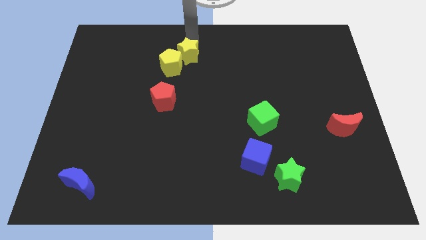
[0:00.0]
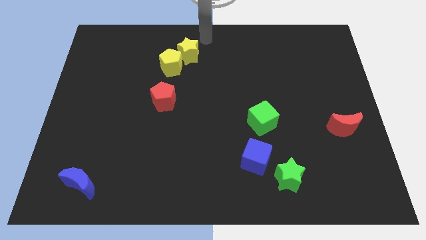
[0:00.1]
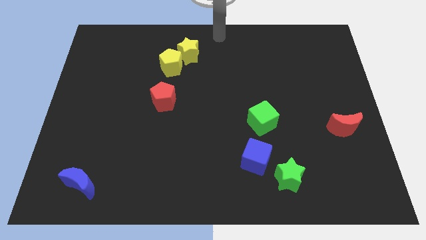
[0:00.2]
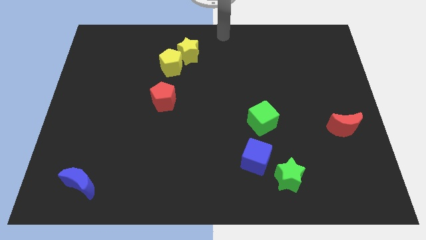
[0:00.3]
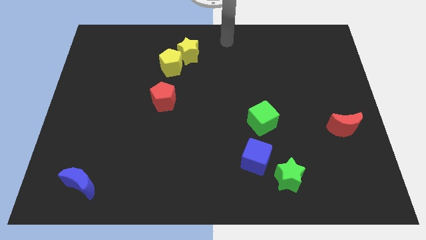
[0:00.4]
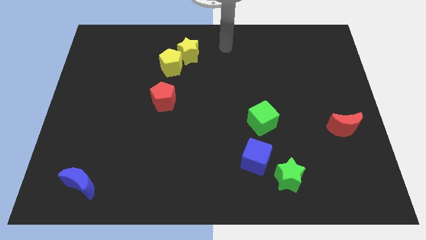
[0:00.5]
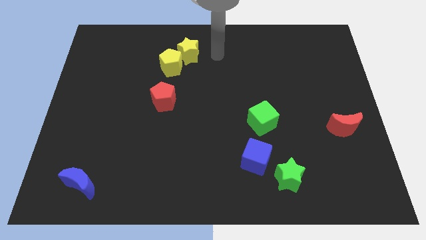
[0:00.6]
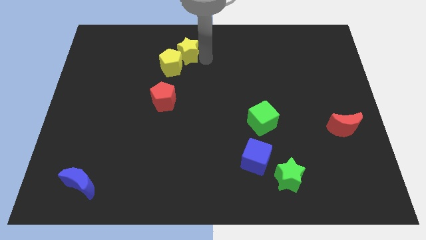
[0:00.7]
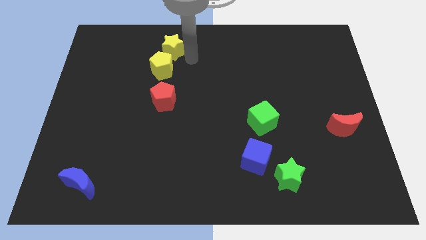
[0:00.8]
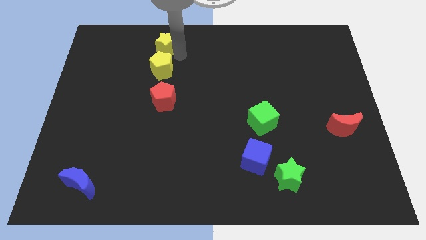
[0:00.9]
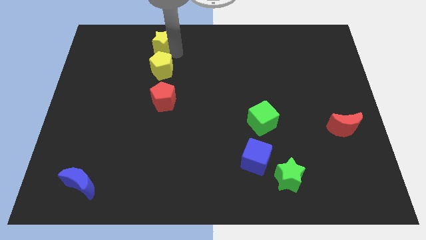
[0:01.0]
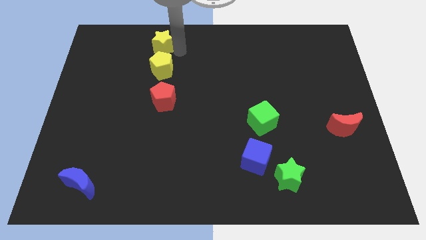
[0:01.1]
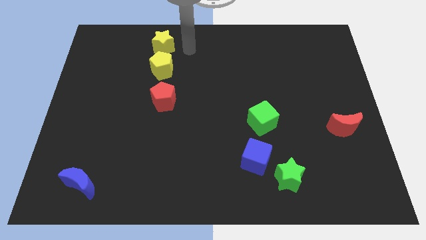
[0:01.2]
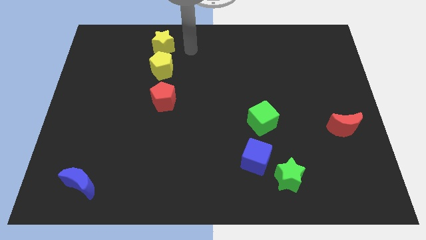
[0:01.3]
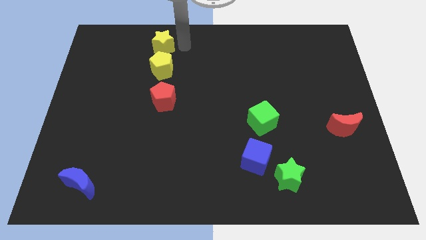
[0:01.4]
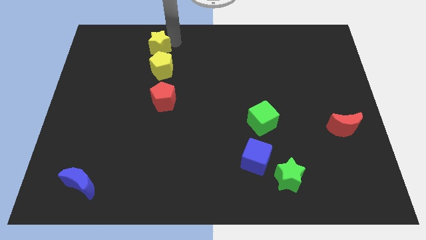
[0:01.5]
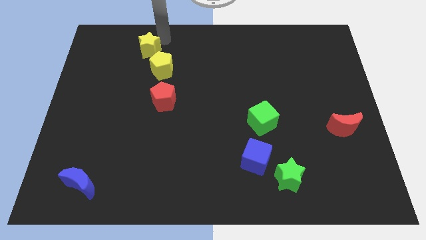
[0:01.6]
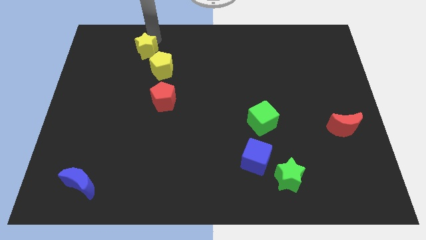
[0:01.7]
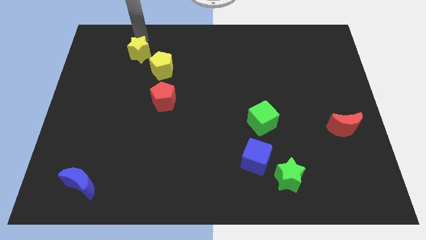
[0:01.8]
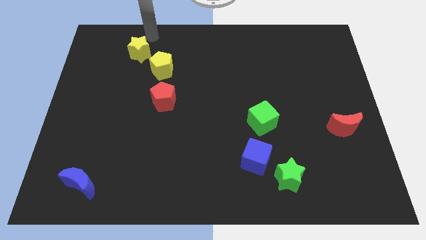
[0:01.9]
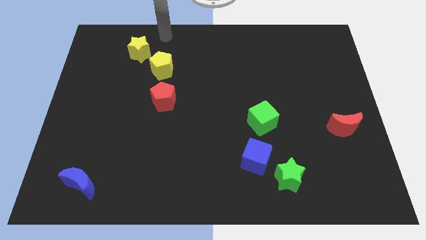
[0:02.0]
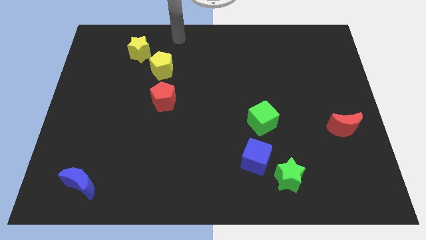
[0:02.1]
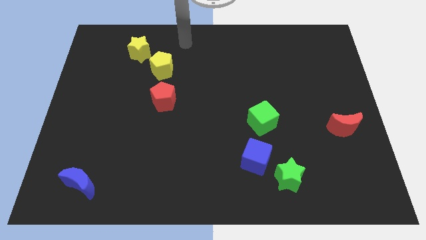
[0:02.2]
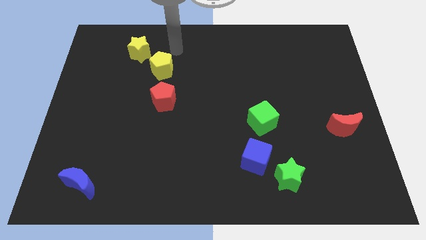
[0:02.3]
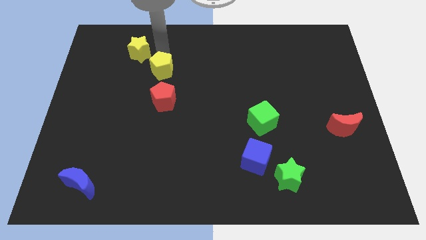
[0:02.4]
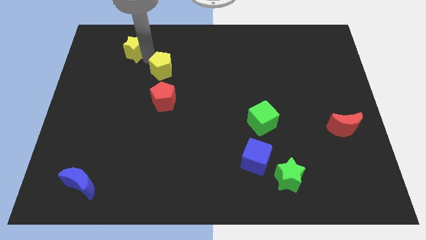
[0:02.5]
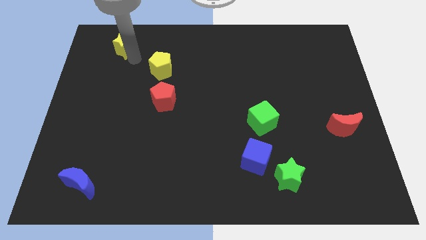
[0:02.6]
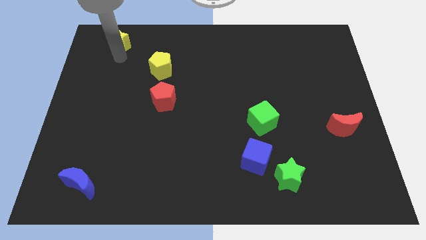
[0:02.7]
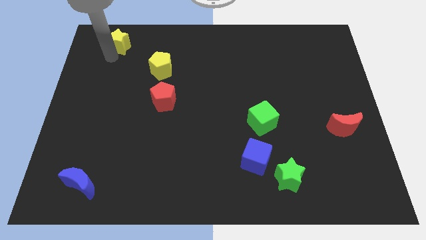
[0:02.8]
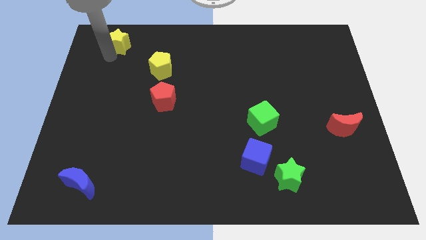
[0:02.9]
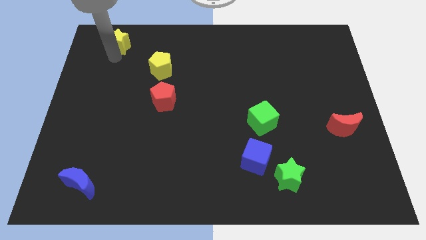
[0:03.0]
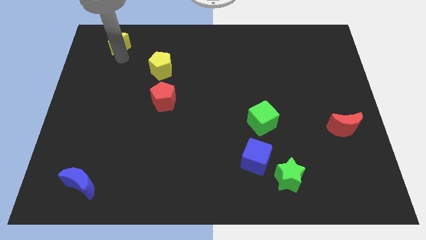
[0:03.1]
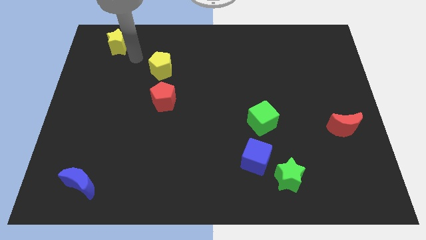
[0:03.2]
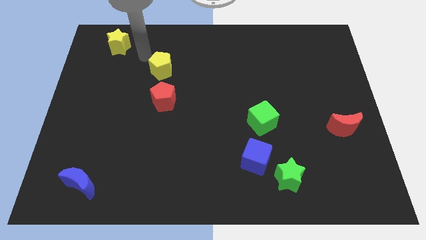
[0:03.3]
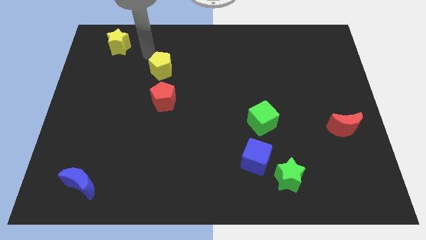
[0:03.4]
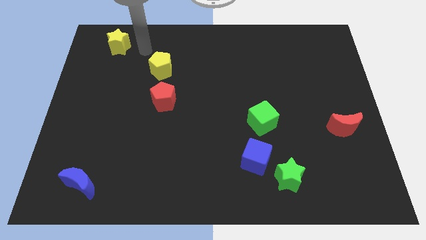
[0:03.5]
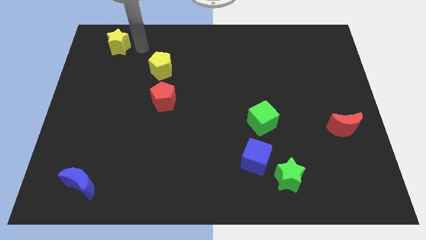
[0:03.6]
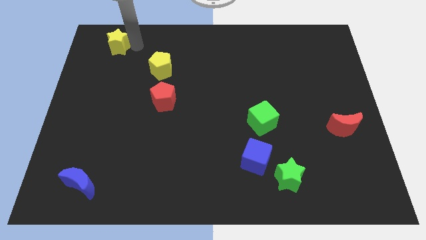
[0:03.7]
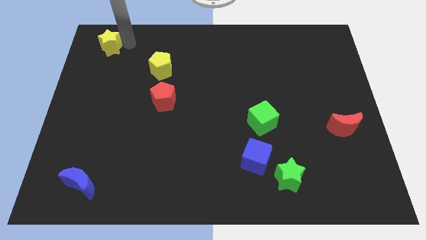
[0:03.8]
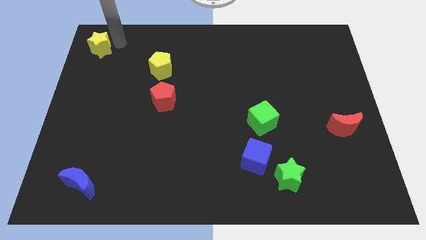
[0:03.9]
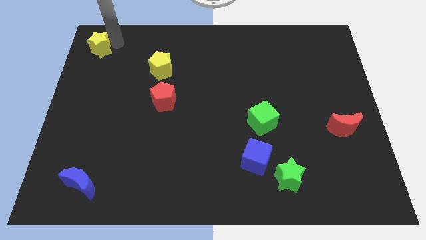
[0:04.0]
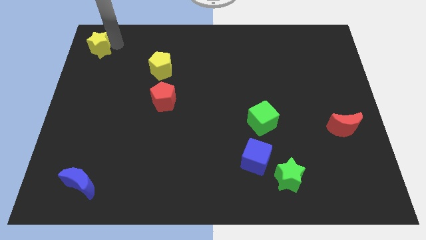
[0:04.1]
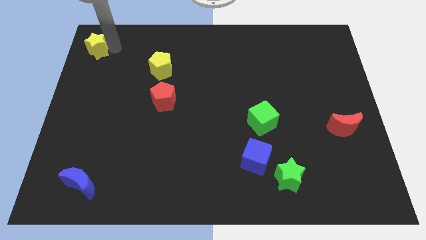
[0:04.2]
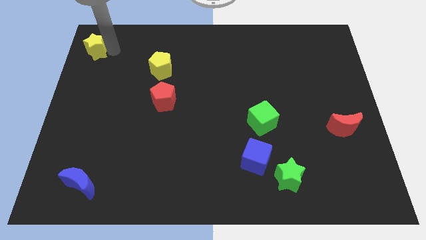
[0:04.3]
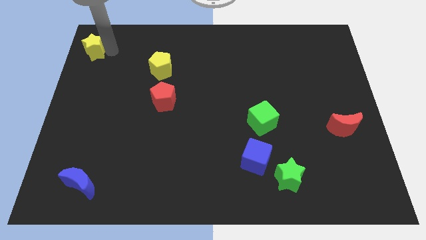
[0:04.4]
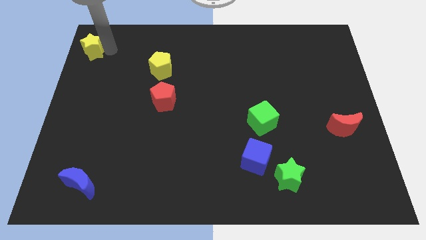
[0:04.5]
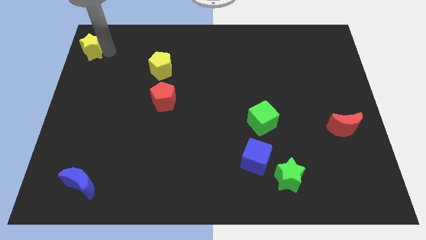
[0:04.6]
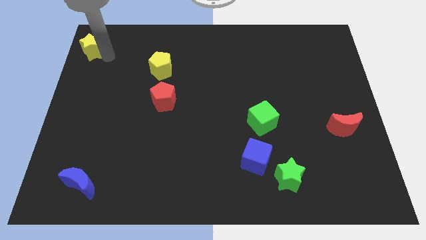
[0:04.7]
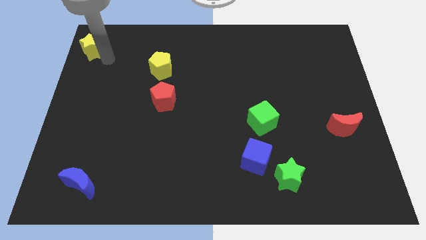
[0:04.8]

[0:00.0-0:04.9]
slide the yellow star to the top left side of the board

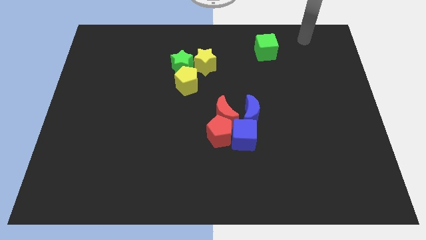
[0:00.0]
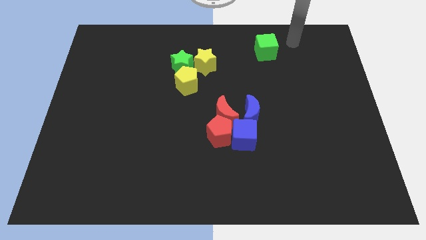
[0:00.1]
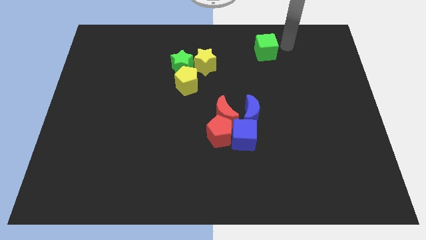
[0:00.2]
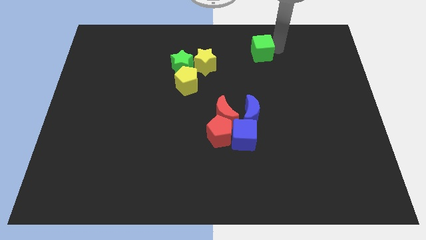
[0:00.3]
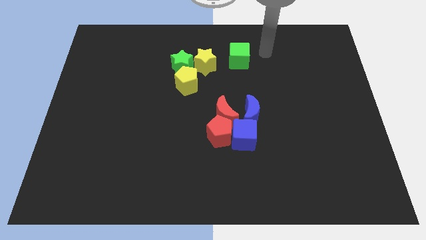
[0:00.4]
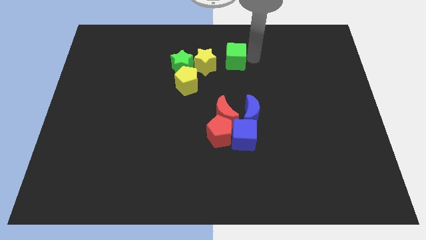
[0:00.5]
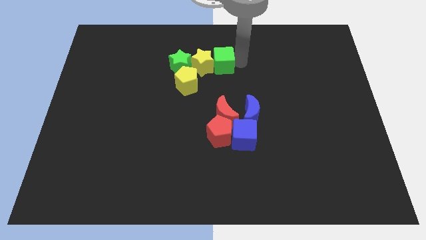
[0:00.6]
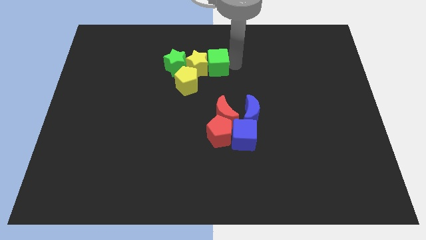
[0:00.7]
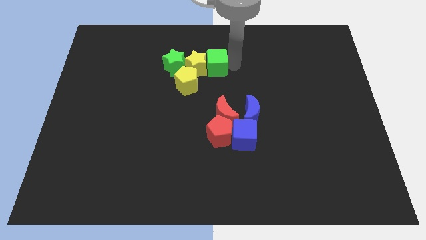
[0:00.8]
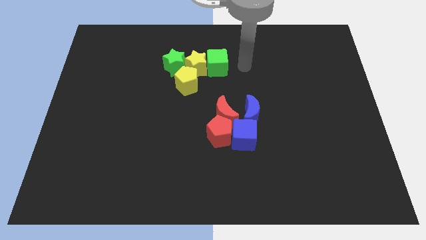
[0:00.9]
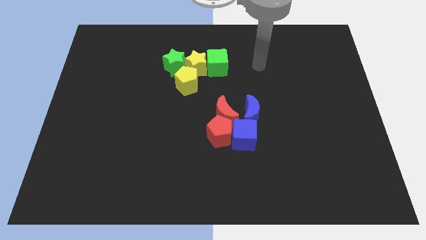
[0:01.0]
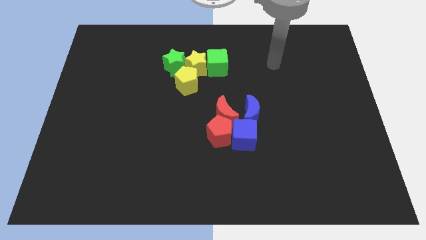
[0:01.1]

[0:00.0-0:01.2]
place green cube near yellow star

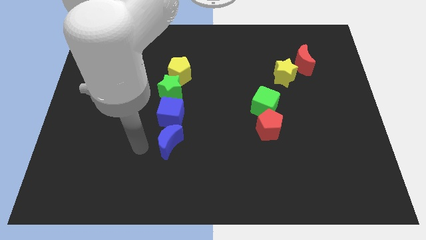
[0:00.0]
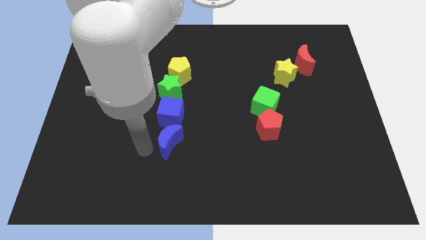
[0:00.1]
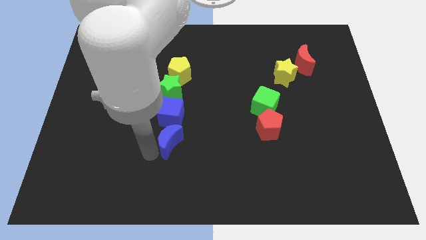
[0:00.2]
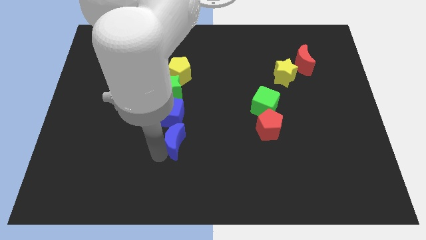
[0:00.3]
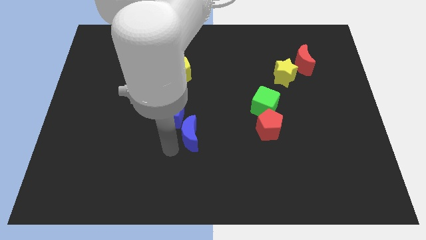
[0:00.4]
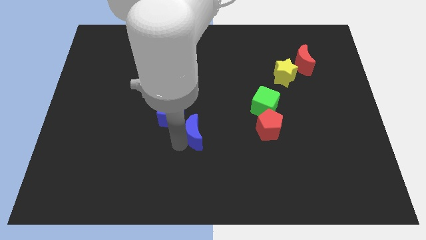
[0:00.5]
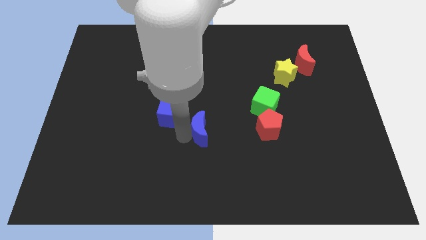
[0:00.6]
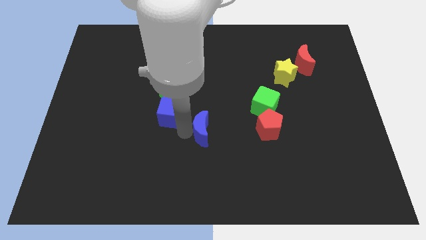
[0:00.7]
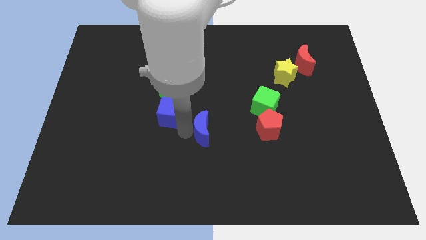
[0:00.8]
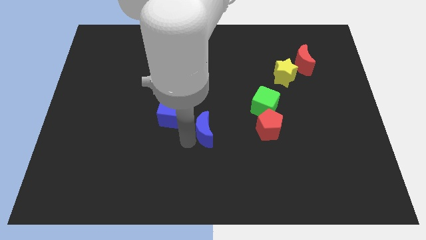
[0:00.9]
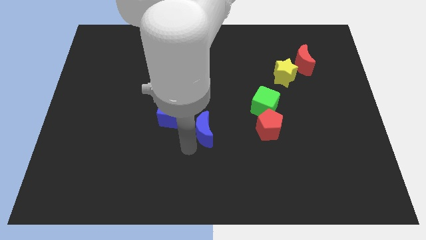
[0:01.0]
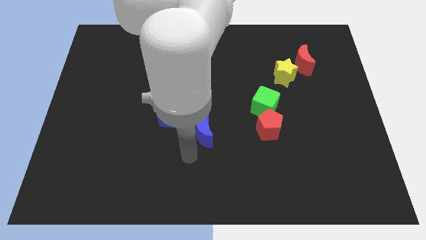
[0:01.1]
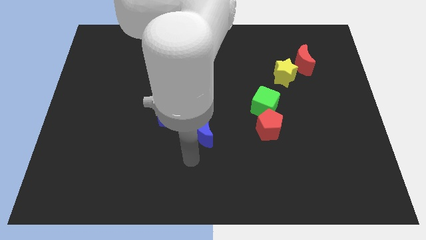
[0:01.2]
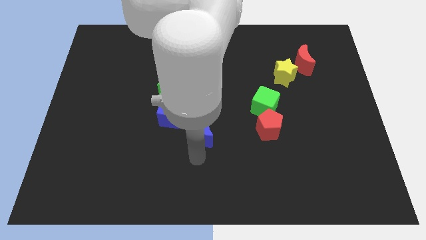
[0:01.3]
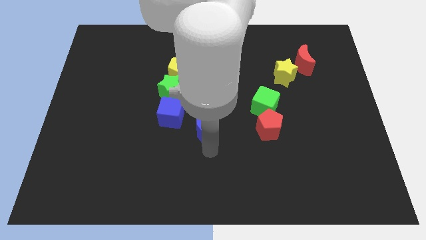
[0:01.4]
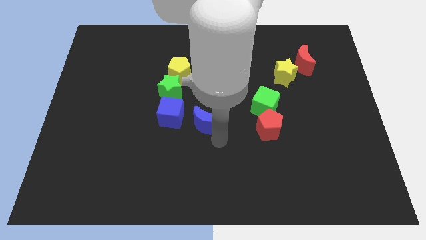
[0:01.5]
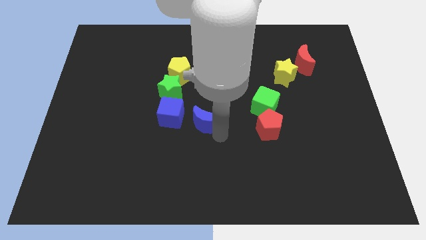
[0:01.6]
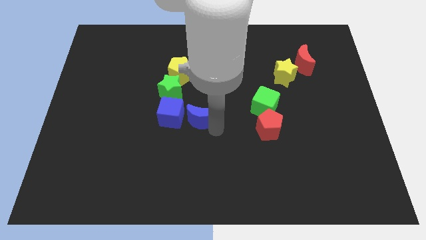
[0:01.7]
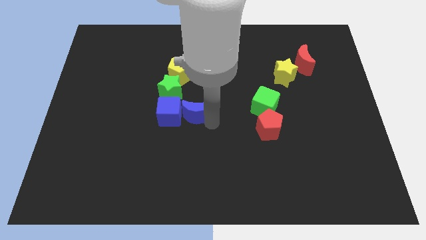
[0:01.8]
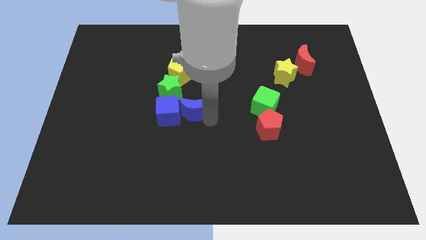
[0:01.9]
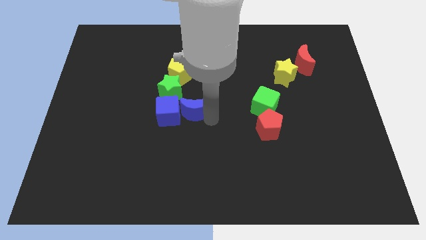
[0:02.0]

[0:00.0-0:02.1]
push the blue crescent into blue square

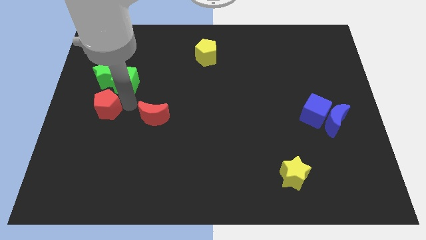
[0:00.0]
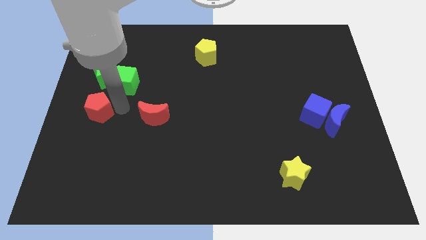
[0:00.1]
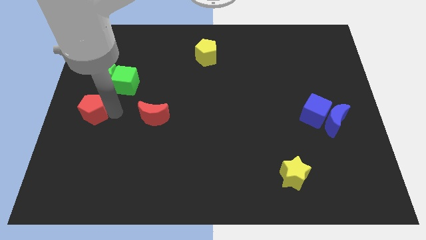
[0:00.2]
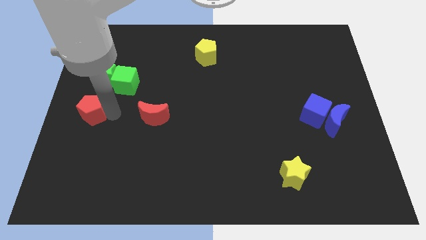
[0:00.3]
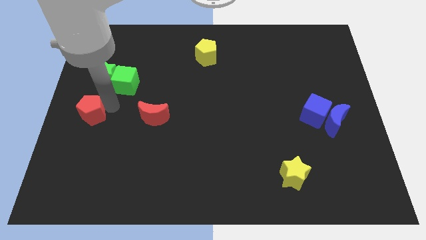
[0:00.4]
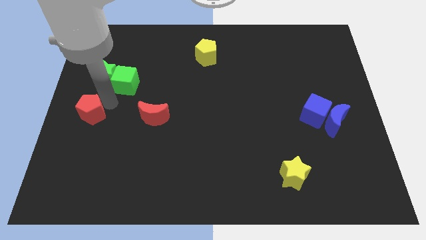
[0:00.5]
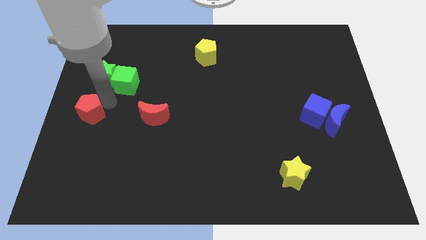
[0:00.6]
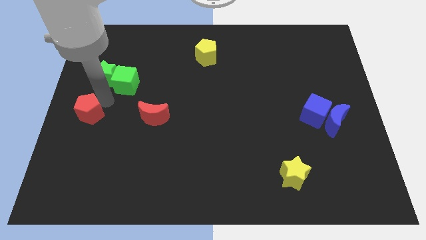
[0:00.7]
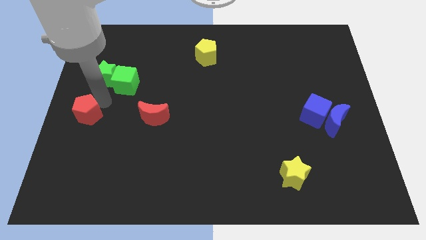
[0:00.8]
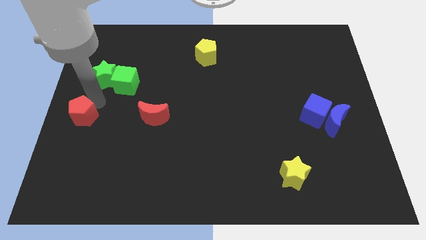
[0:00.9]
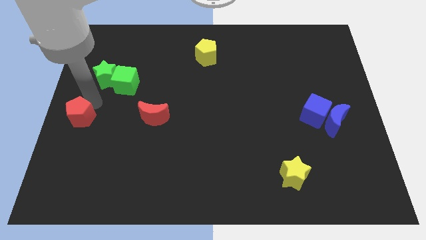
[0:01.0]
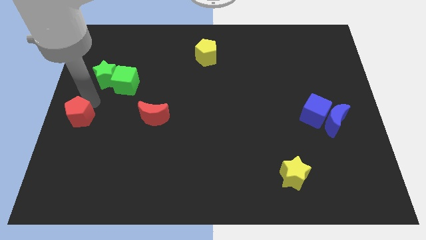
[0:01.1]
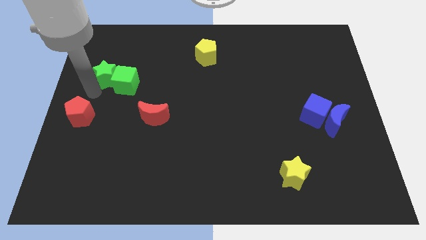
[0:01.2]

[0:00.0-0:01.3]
push the red pentagon towards the left
